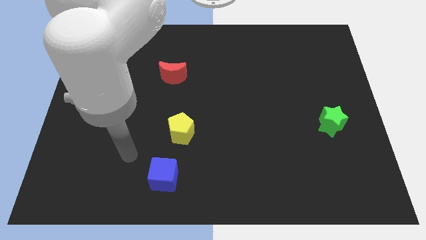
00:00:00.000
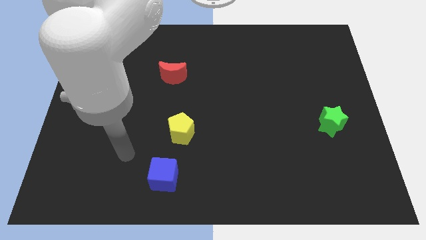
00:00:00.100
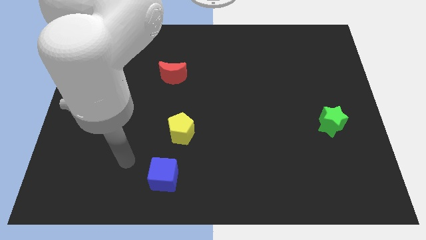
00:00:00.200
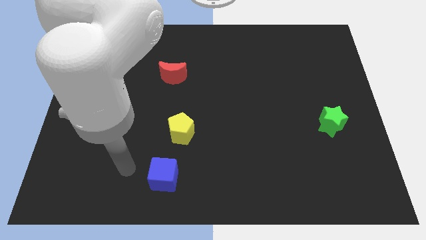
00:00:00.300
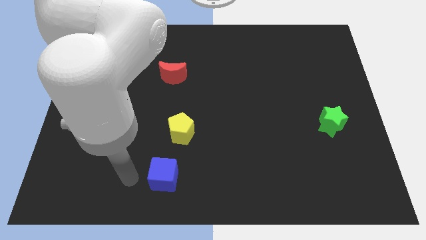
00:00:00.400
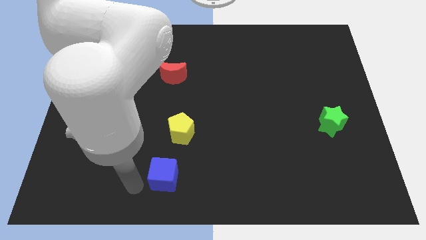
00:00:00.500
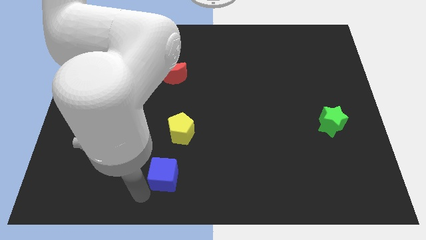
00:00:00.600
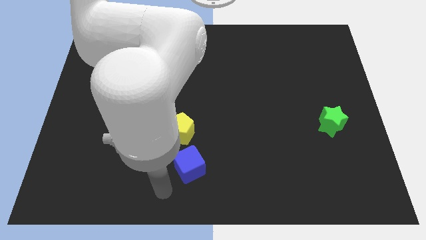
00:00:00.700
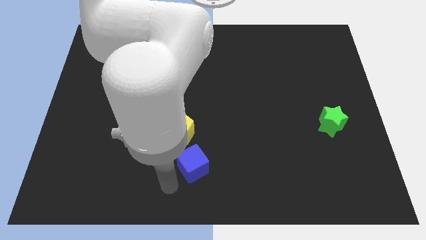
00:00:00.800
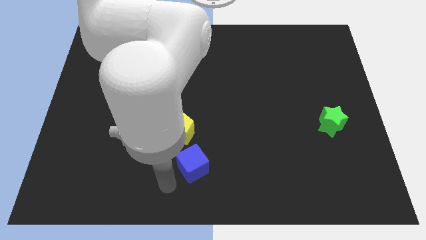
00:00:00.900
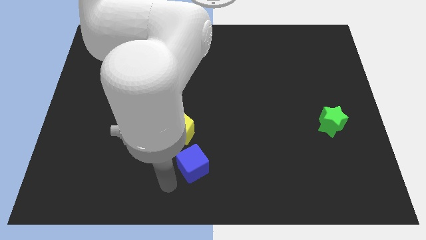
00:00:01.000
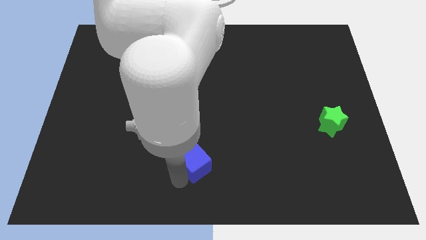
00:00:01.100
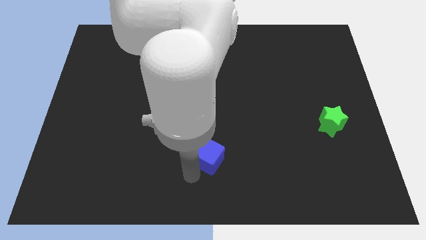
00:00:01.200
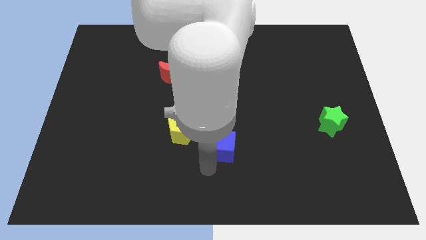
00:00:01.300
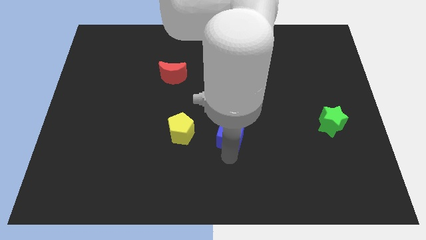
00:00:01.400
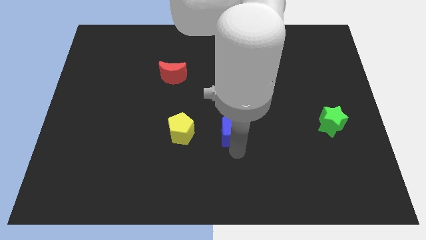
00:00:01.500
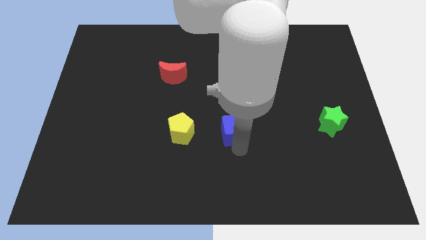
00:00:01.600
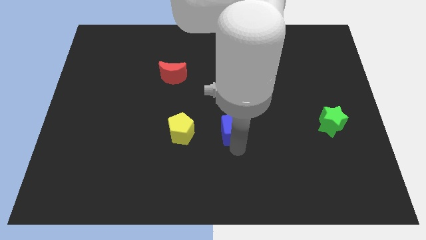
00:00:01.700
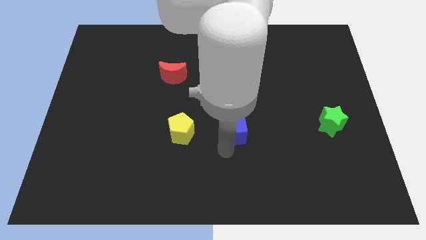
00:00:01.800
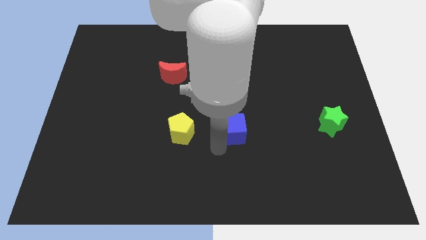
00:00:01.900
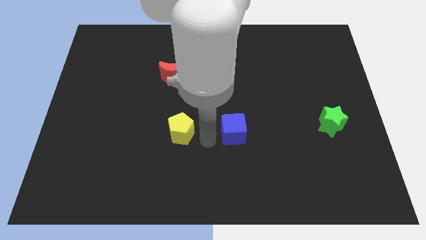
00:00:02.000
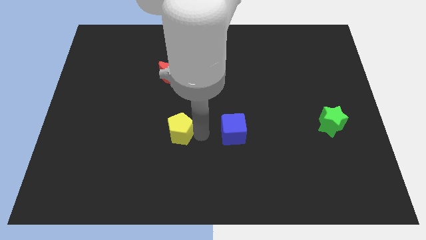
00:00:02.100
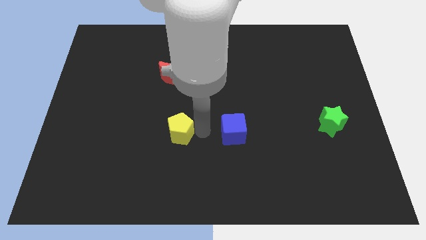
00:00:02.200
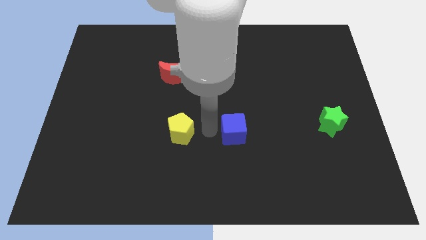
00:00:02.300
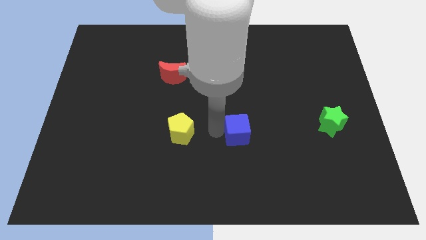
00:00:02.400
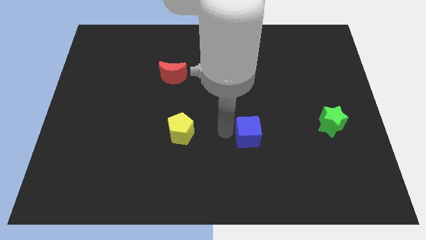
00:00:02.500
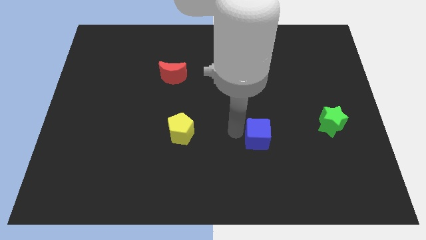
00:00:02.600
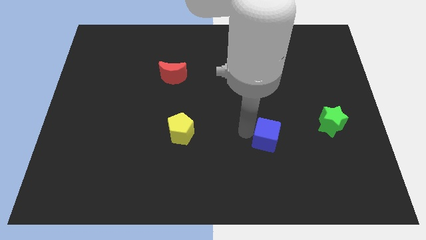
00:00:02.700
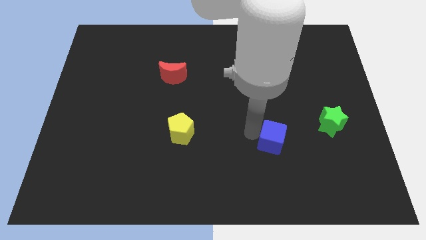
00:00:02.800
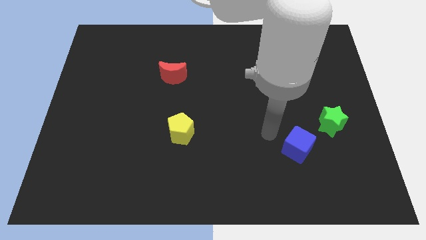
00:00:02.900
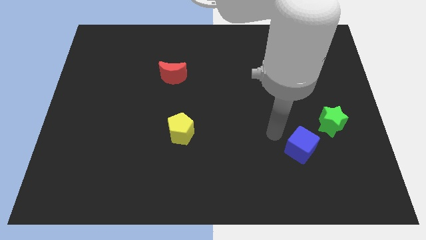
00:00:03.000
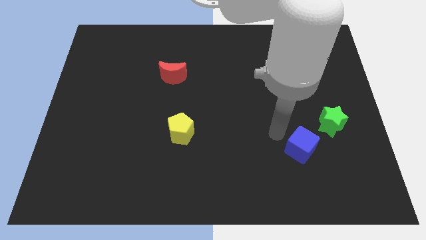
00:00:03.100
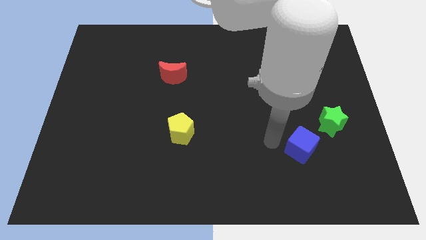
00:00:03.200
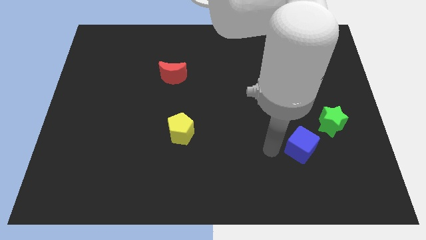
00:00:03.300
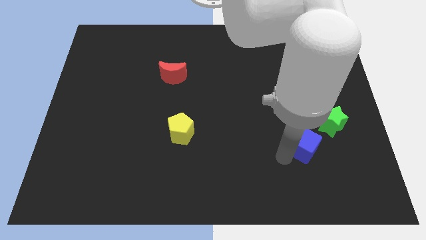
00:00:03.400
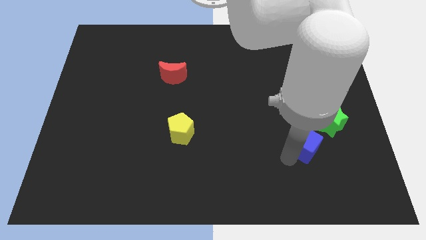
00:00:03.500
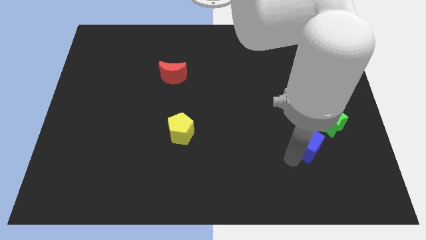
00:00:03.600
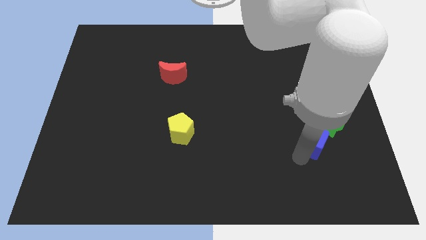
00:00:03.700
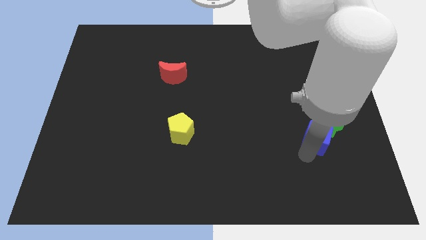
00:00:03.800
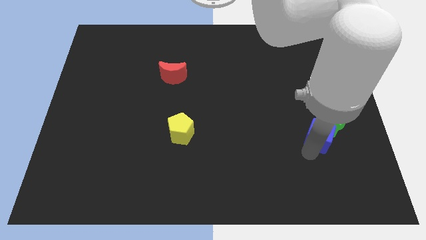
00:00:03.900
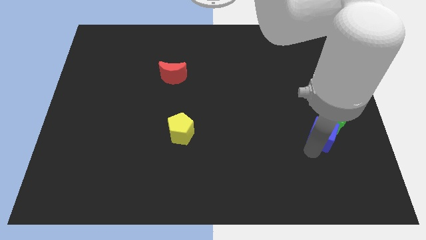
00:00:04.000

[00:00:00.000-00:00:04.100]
move the blue block next to the green block

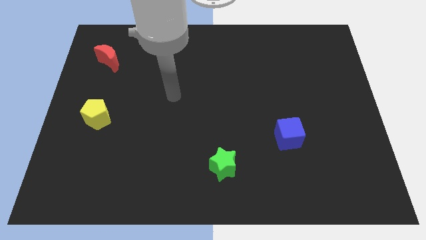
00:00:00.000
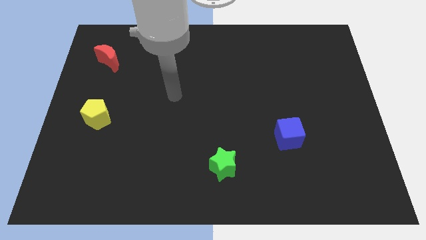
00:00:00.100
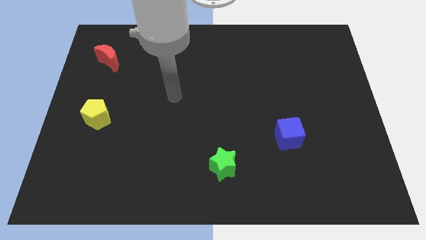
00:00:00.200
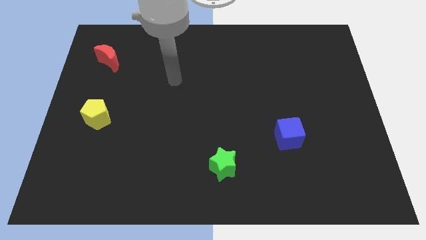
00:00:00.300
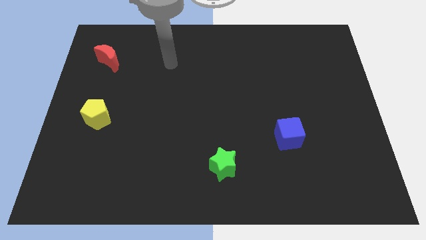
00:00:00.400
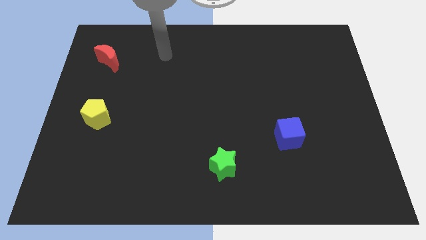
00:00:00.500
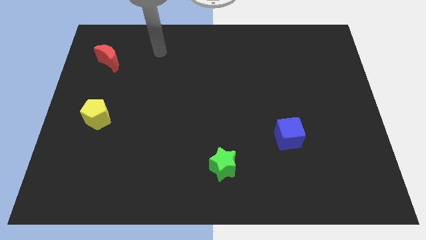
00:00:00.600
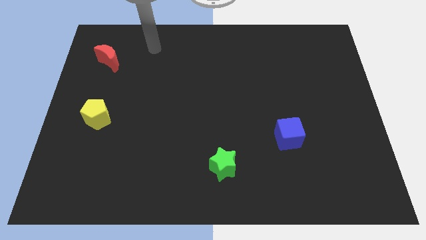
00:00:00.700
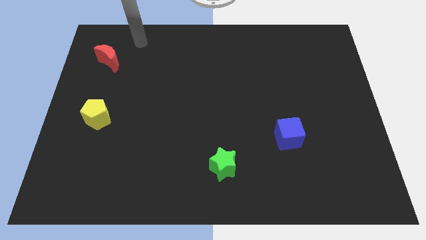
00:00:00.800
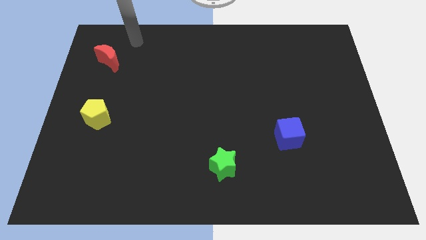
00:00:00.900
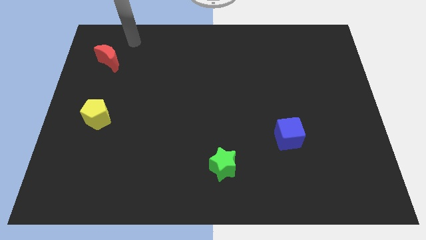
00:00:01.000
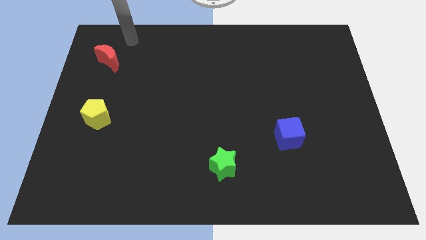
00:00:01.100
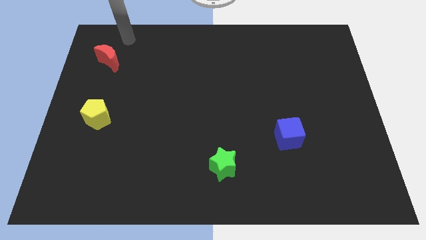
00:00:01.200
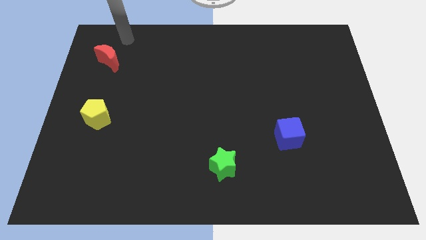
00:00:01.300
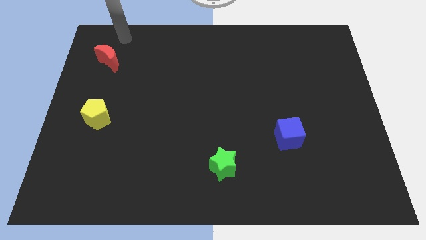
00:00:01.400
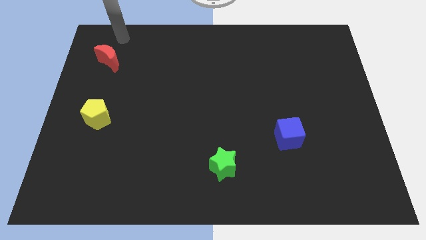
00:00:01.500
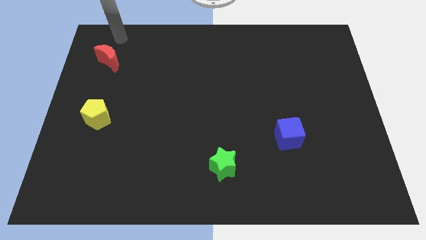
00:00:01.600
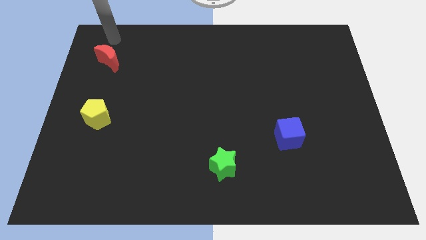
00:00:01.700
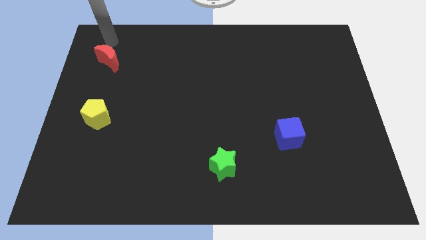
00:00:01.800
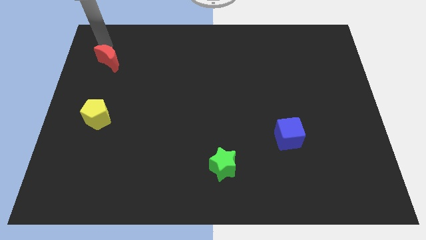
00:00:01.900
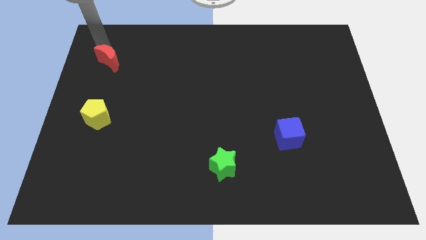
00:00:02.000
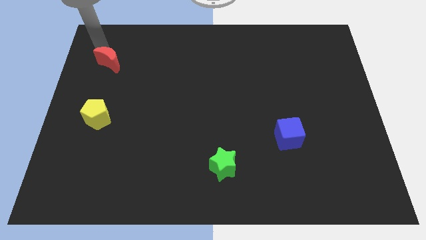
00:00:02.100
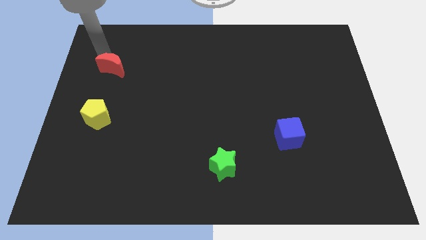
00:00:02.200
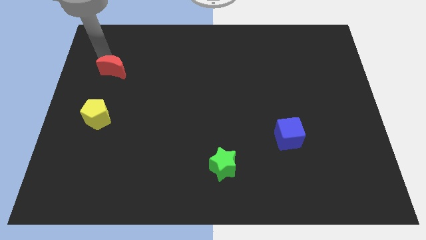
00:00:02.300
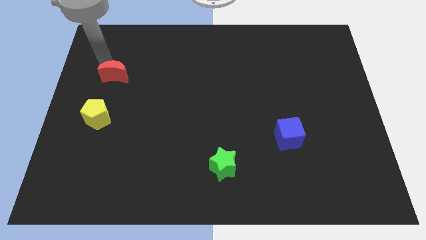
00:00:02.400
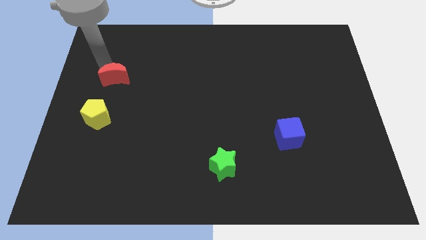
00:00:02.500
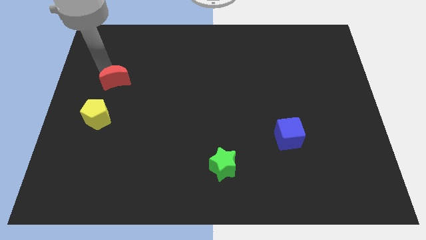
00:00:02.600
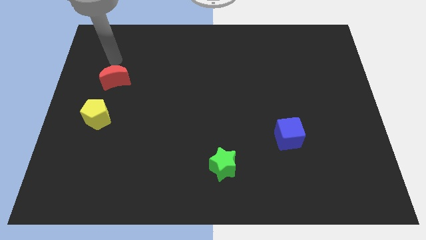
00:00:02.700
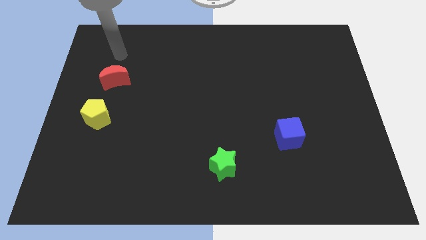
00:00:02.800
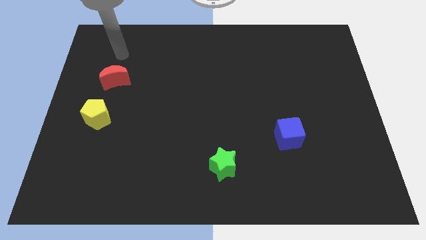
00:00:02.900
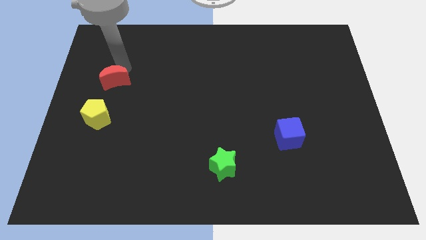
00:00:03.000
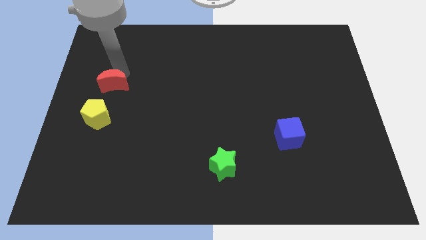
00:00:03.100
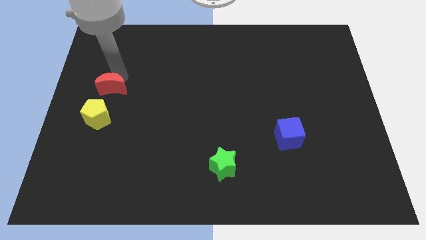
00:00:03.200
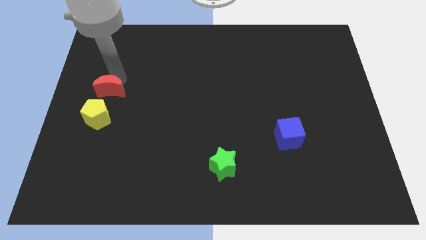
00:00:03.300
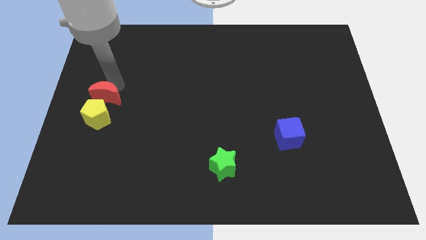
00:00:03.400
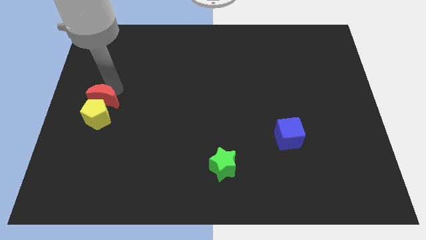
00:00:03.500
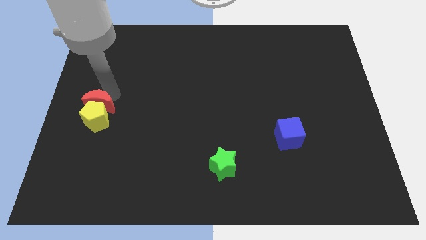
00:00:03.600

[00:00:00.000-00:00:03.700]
put the moon towards the yellow pentagon

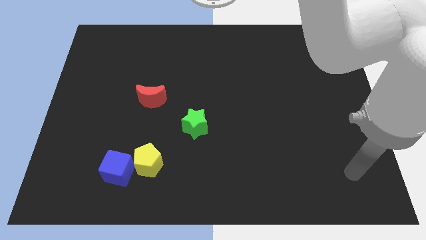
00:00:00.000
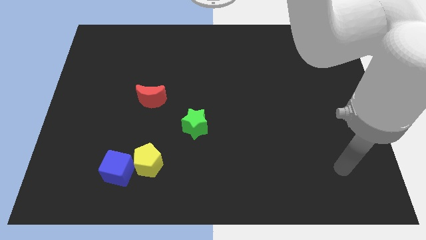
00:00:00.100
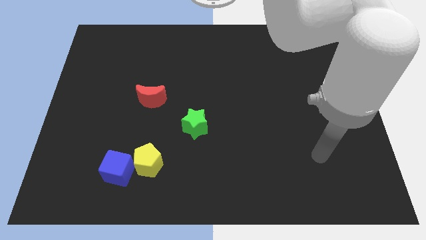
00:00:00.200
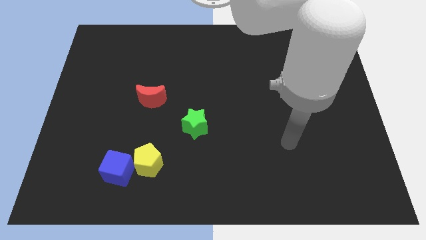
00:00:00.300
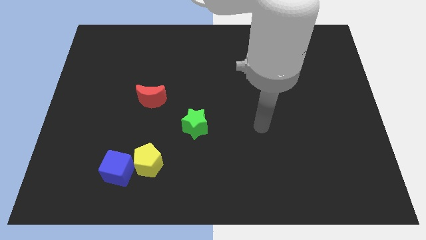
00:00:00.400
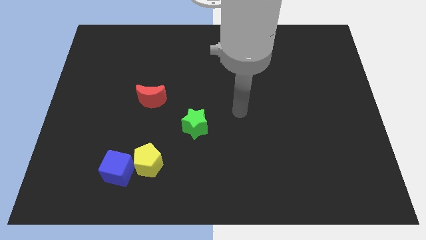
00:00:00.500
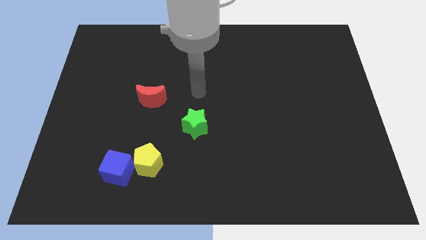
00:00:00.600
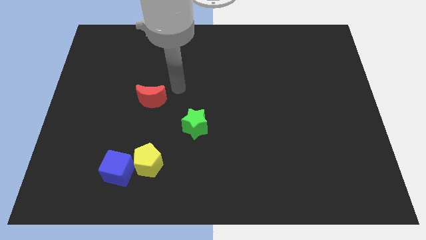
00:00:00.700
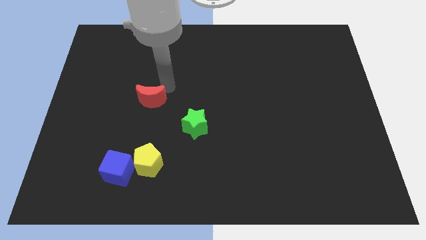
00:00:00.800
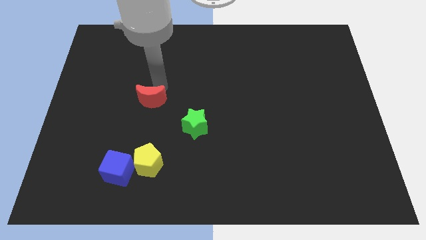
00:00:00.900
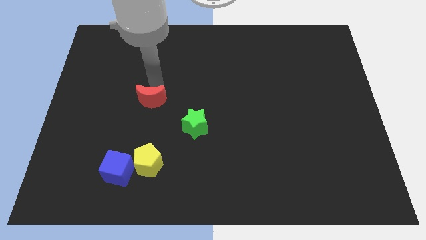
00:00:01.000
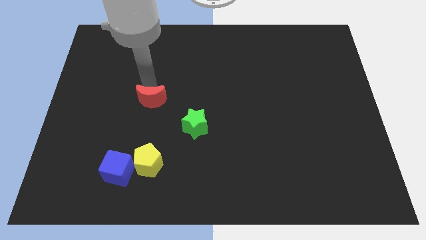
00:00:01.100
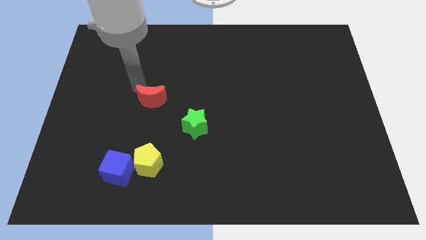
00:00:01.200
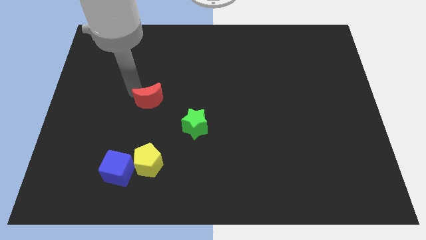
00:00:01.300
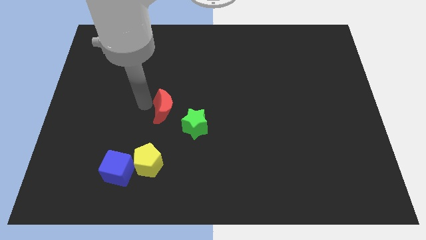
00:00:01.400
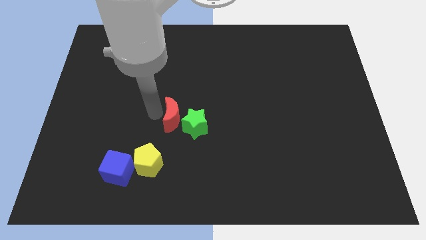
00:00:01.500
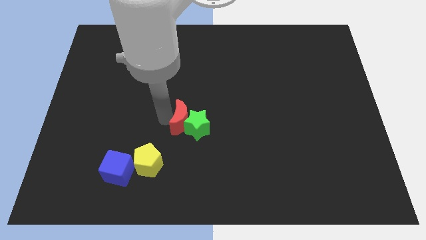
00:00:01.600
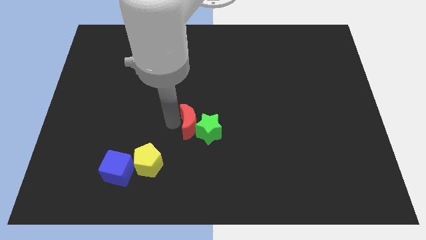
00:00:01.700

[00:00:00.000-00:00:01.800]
put the red block towards the star
